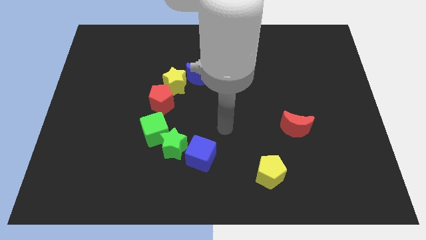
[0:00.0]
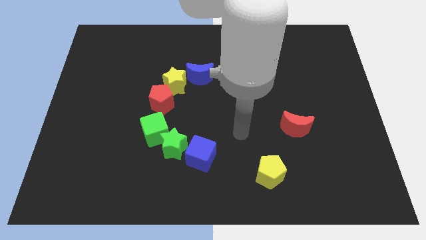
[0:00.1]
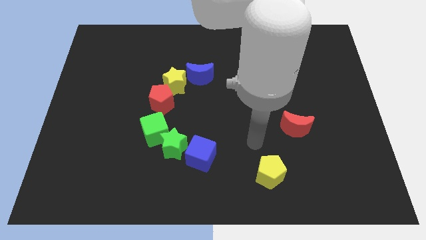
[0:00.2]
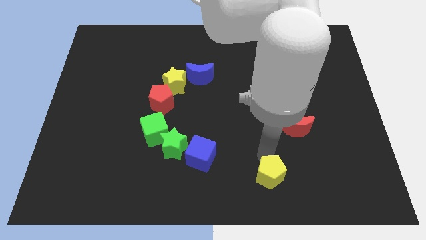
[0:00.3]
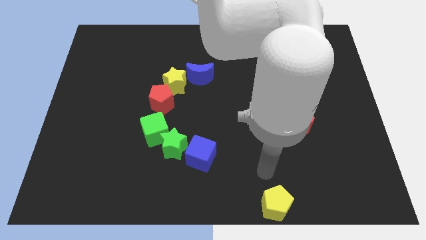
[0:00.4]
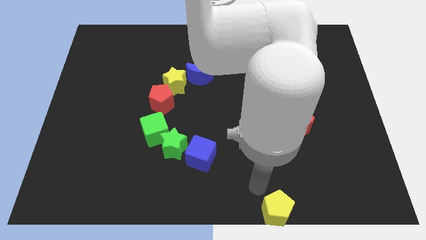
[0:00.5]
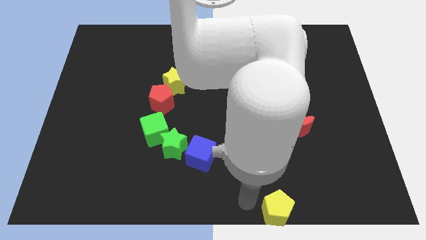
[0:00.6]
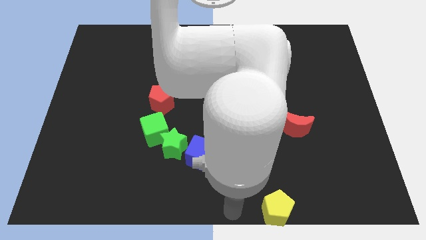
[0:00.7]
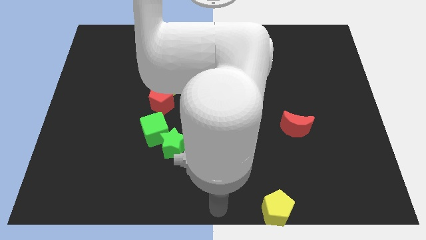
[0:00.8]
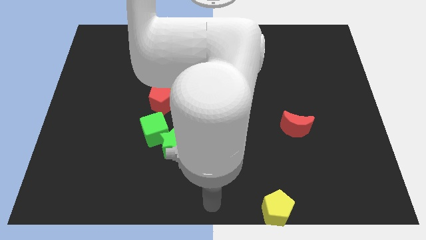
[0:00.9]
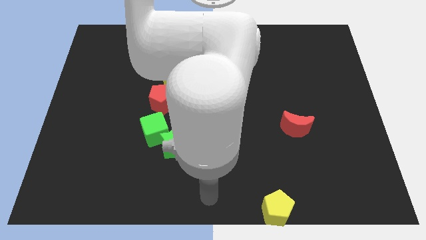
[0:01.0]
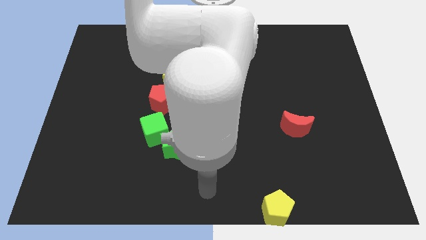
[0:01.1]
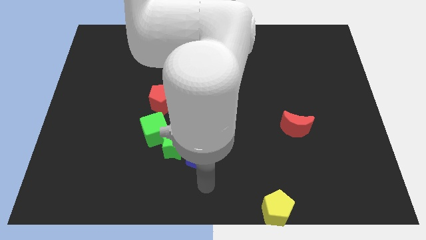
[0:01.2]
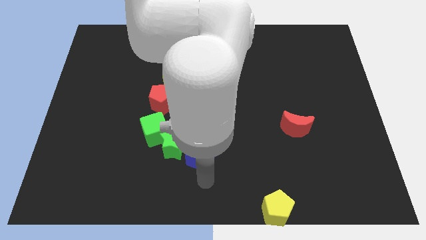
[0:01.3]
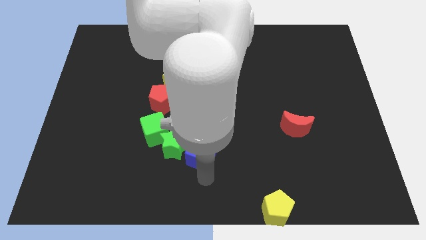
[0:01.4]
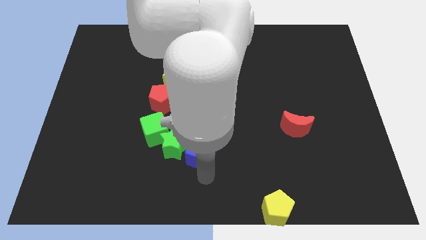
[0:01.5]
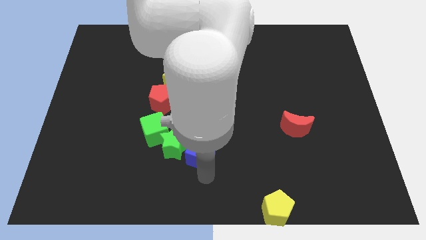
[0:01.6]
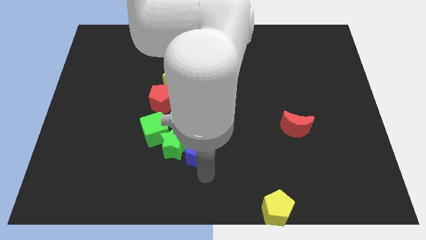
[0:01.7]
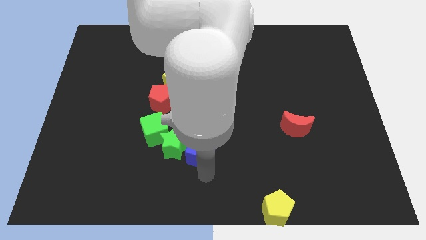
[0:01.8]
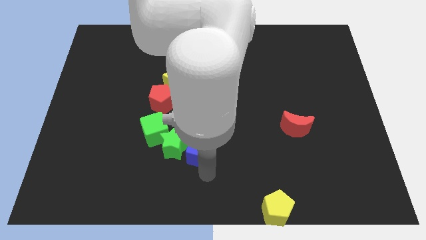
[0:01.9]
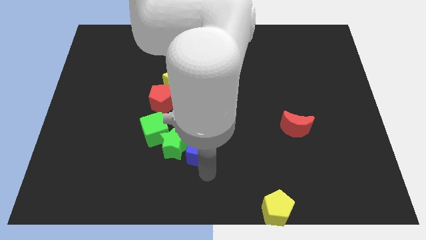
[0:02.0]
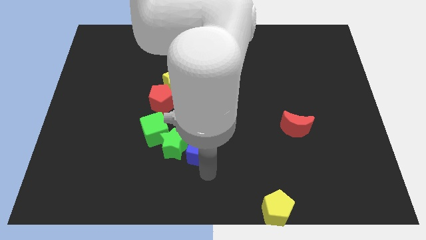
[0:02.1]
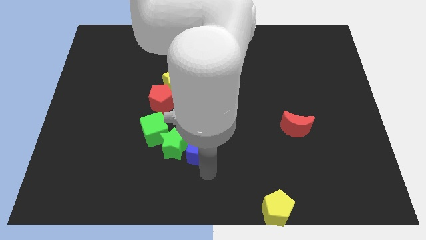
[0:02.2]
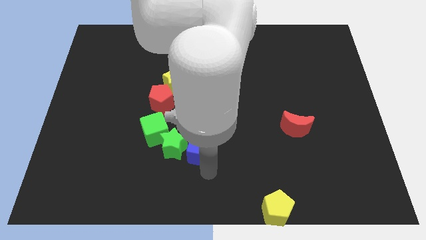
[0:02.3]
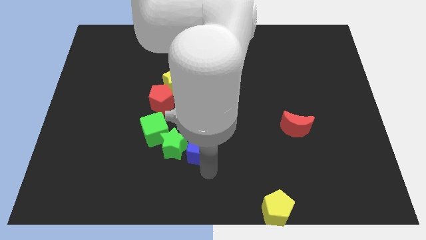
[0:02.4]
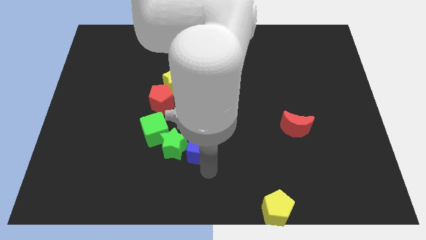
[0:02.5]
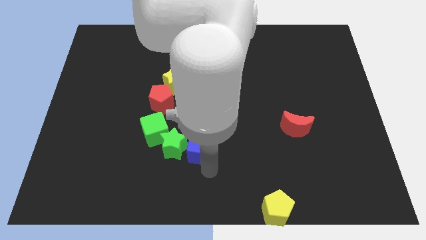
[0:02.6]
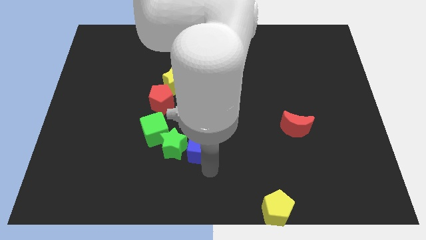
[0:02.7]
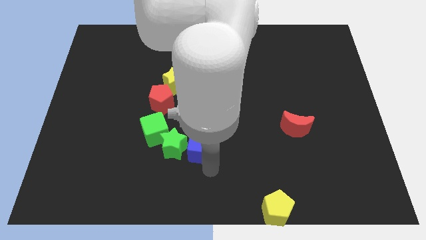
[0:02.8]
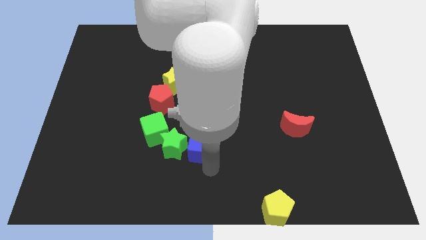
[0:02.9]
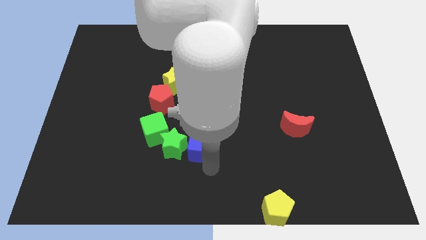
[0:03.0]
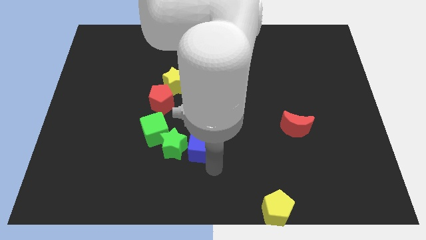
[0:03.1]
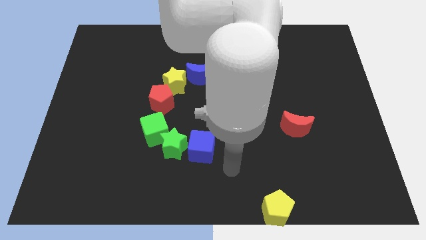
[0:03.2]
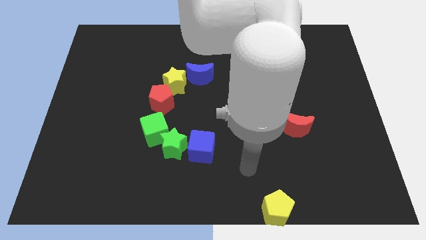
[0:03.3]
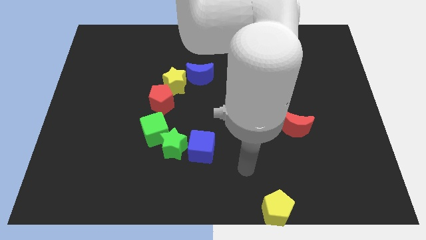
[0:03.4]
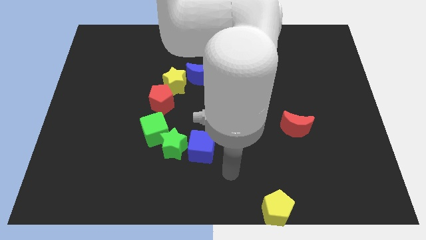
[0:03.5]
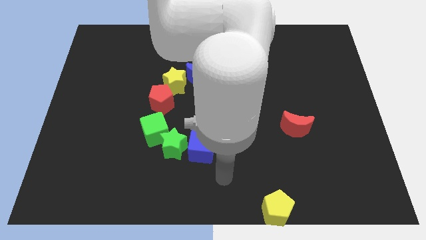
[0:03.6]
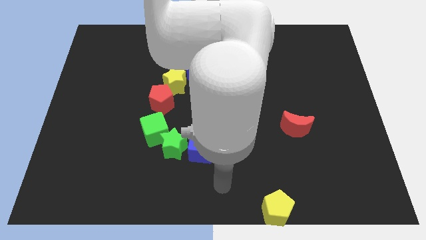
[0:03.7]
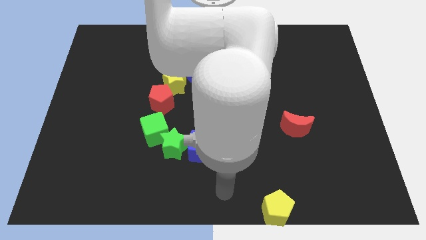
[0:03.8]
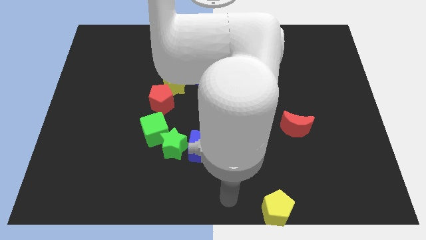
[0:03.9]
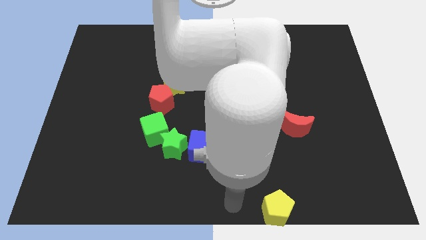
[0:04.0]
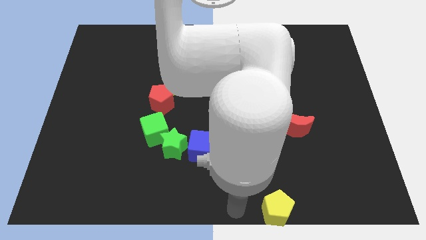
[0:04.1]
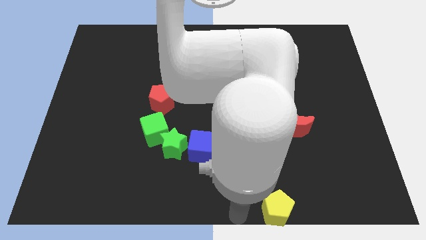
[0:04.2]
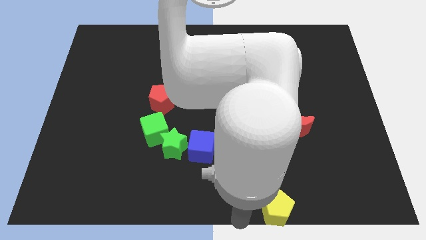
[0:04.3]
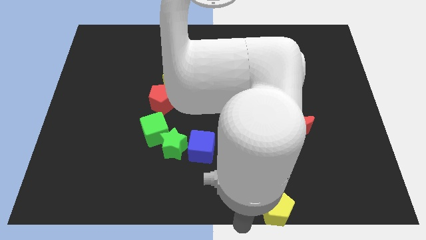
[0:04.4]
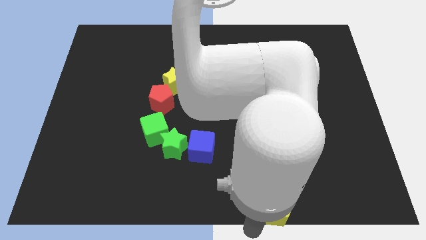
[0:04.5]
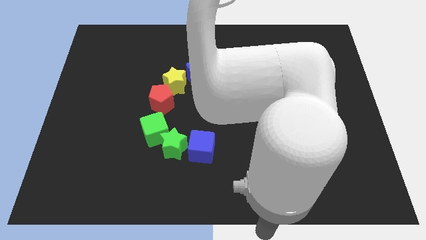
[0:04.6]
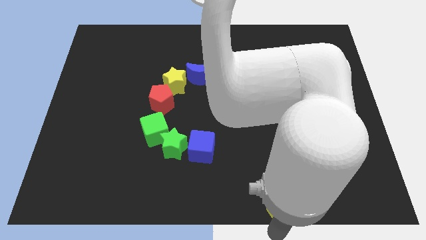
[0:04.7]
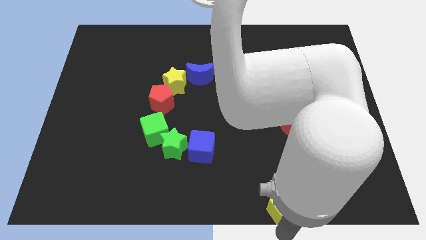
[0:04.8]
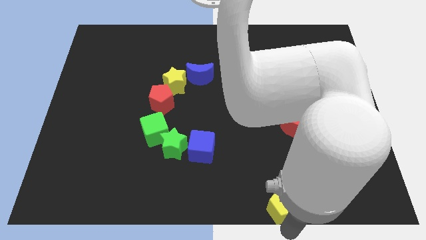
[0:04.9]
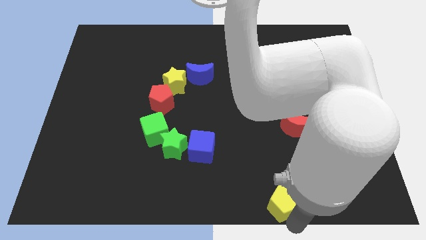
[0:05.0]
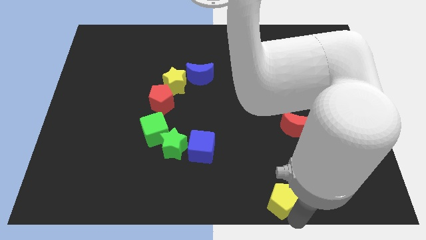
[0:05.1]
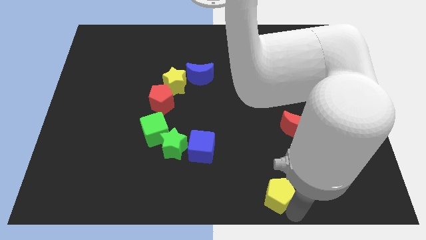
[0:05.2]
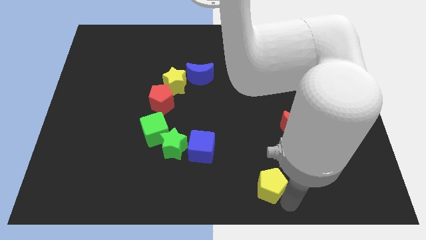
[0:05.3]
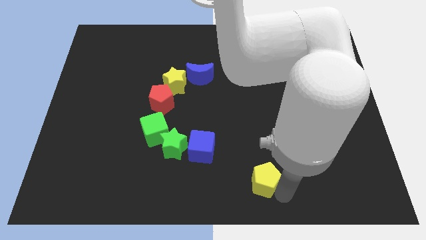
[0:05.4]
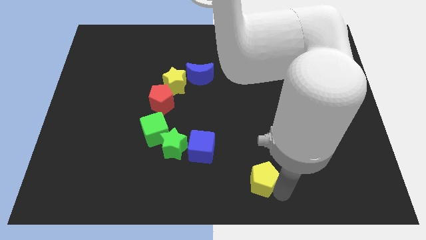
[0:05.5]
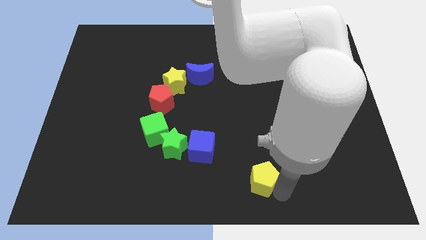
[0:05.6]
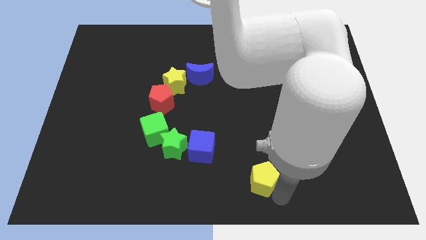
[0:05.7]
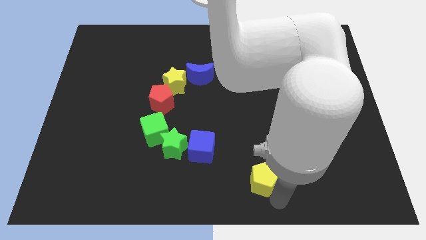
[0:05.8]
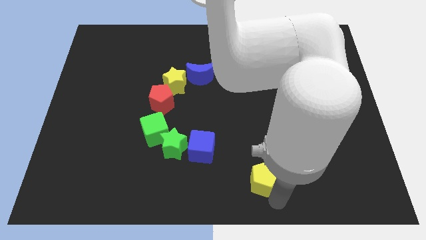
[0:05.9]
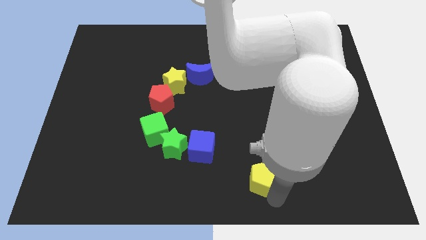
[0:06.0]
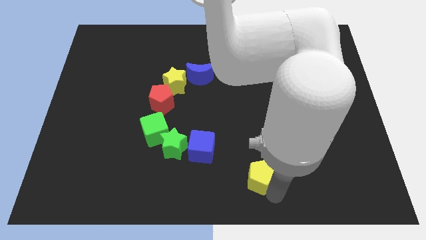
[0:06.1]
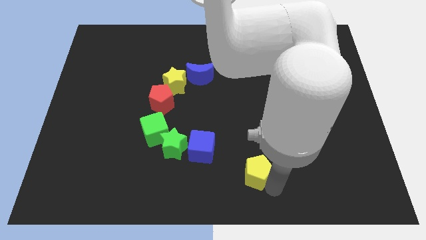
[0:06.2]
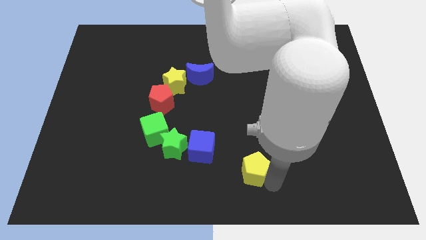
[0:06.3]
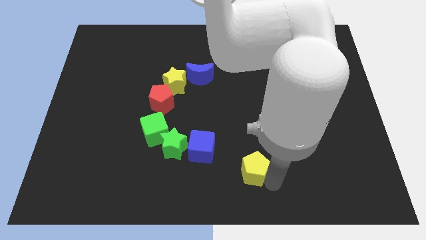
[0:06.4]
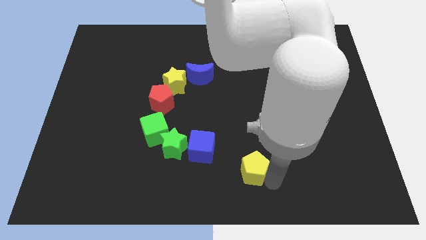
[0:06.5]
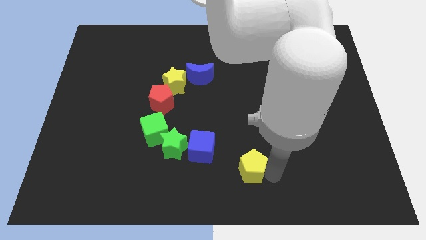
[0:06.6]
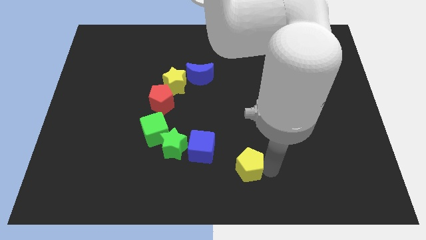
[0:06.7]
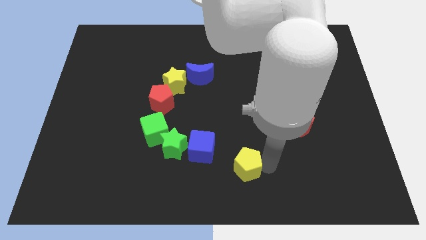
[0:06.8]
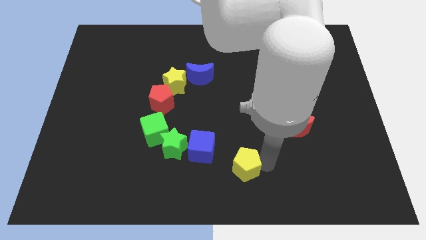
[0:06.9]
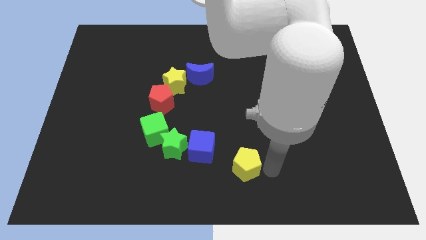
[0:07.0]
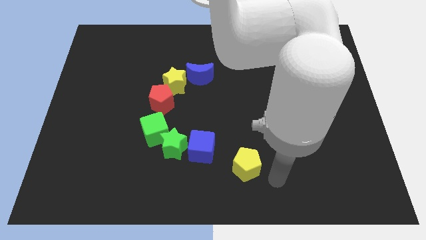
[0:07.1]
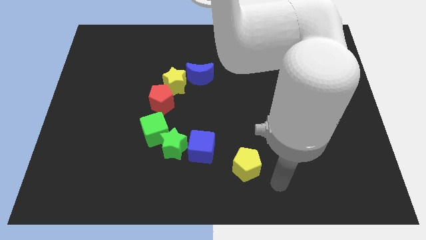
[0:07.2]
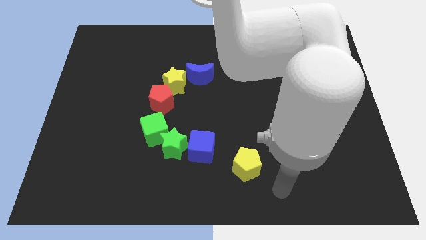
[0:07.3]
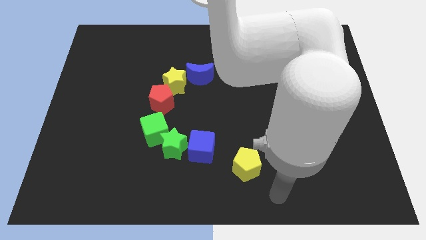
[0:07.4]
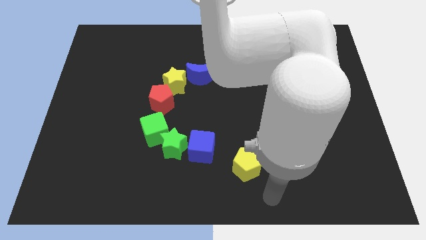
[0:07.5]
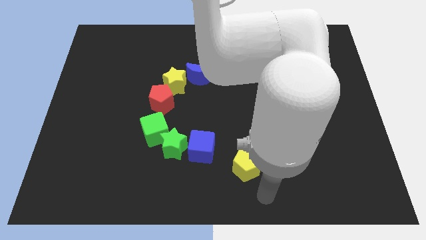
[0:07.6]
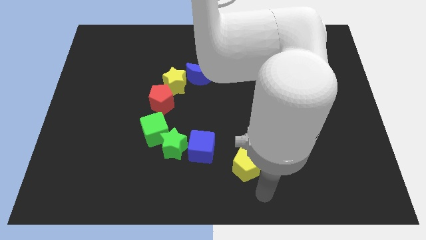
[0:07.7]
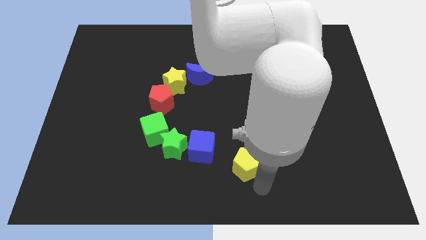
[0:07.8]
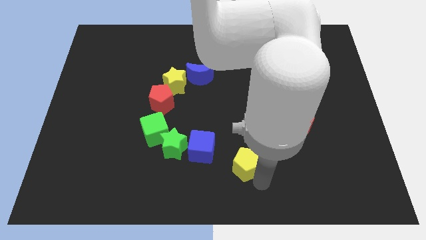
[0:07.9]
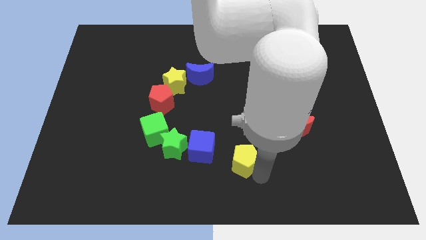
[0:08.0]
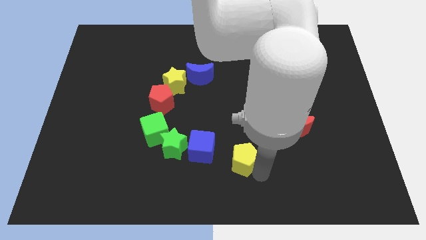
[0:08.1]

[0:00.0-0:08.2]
move the yellow pentagon to the bottom right of the blue cube

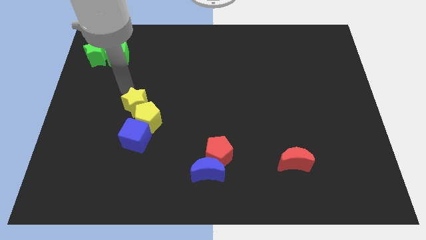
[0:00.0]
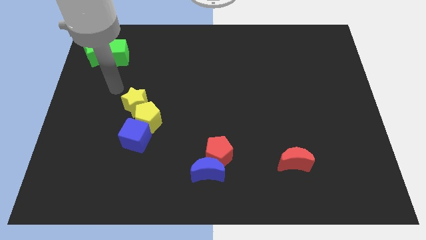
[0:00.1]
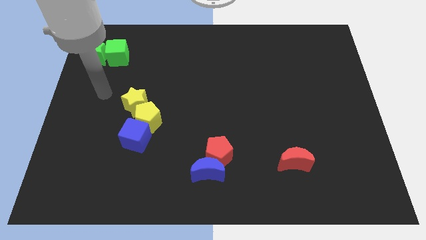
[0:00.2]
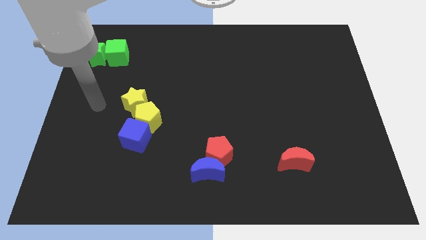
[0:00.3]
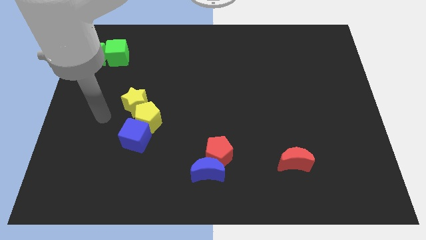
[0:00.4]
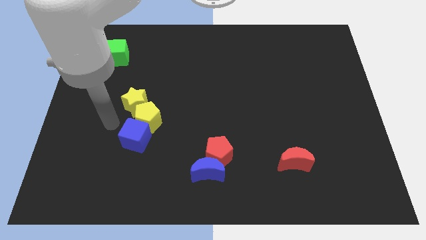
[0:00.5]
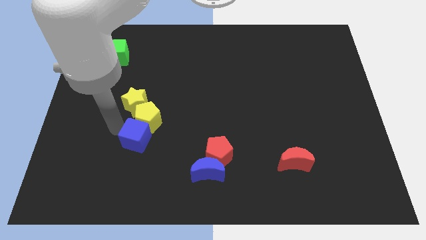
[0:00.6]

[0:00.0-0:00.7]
move your arm left to the blue cube
